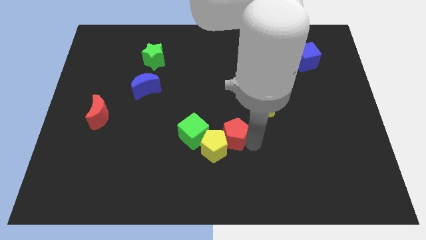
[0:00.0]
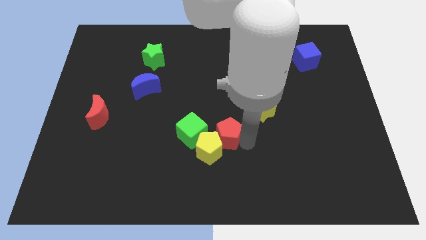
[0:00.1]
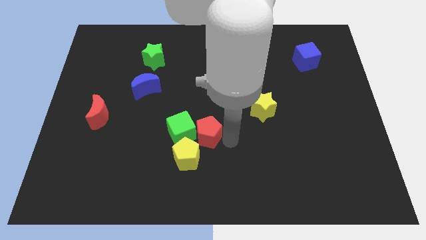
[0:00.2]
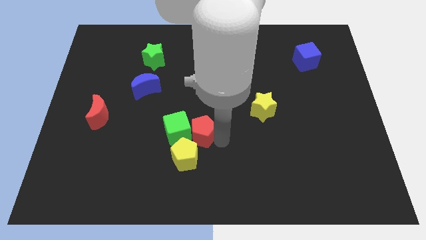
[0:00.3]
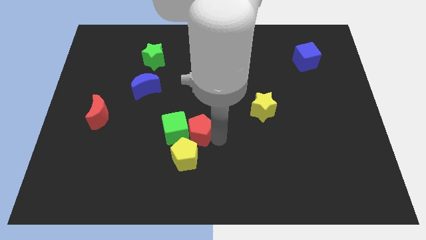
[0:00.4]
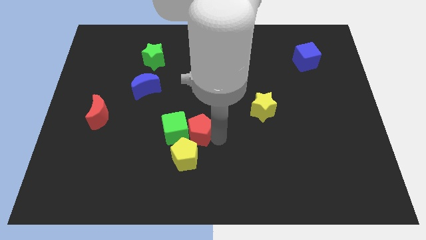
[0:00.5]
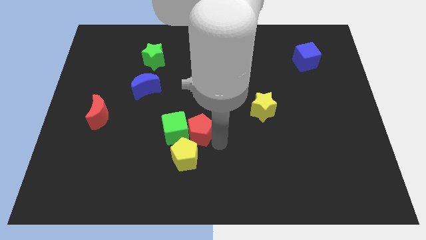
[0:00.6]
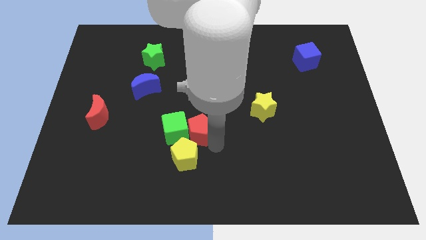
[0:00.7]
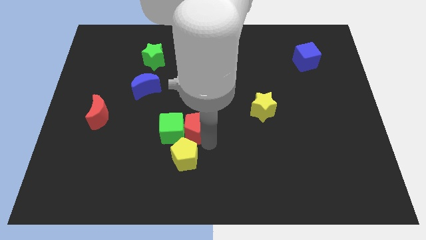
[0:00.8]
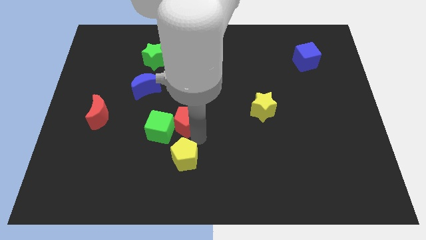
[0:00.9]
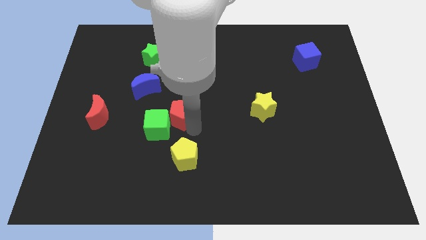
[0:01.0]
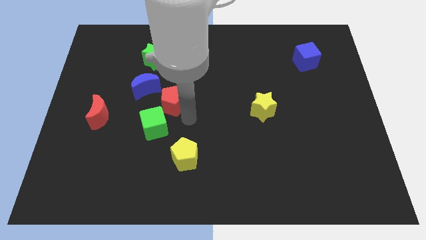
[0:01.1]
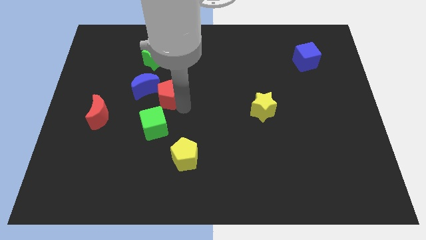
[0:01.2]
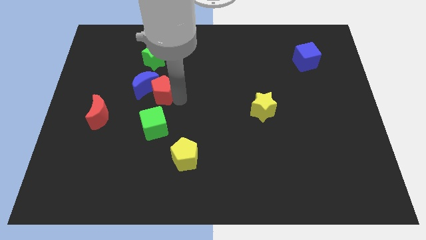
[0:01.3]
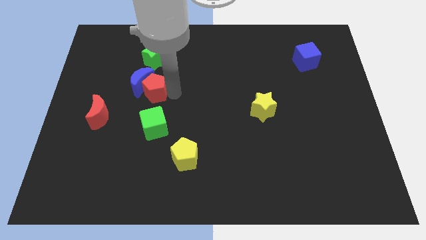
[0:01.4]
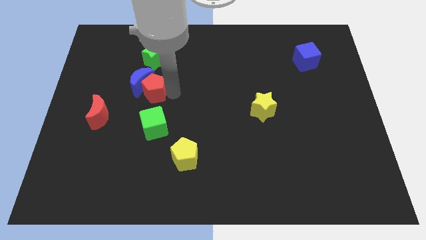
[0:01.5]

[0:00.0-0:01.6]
move the red pentagon into the blue moon

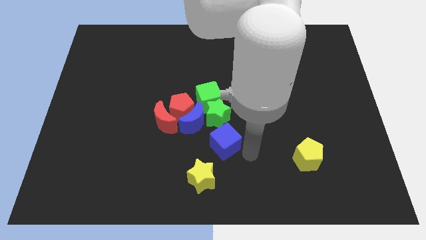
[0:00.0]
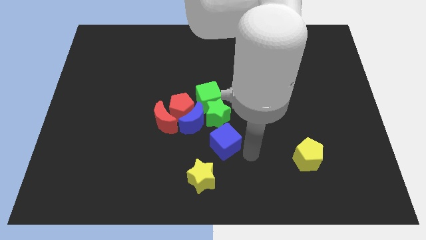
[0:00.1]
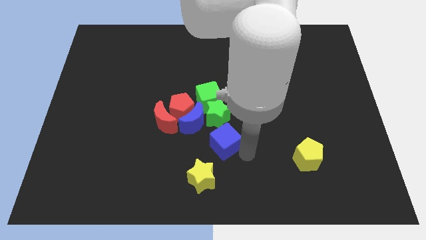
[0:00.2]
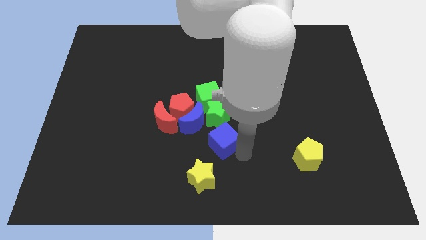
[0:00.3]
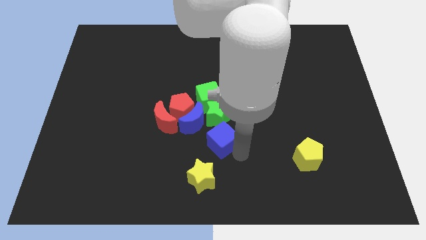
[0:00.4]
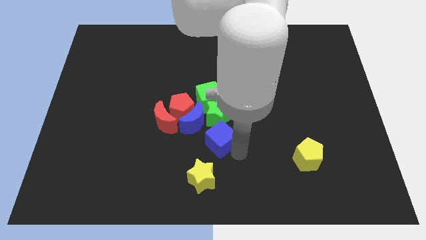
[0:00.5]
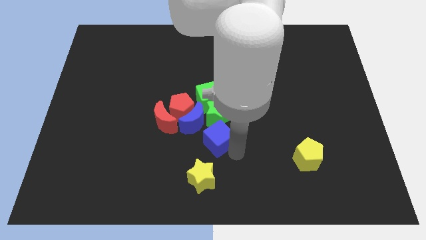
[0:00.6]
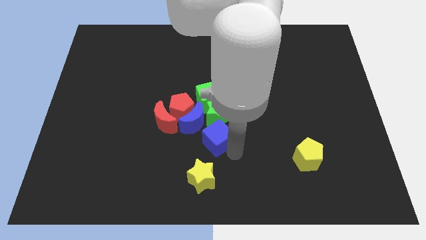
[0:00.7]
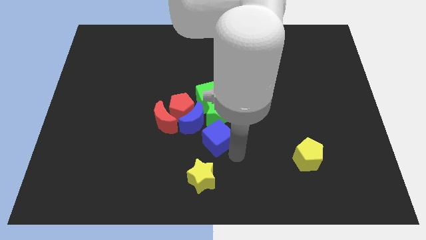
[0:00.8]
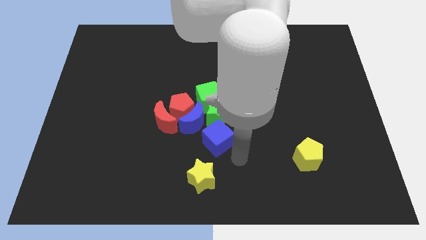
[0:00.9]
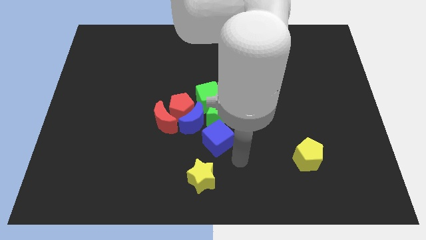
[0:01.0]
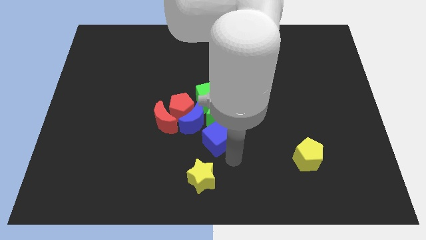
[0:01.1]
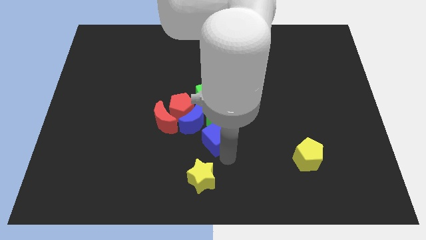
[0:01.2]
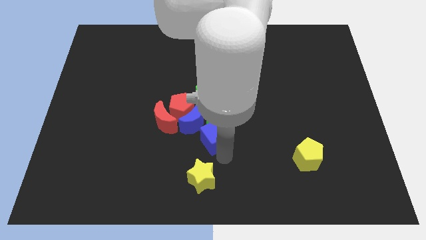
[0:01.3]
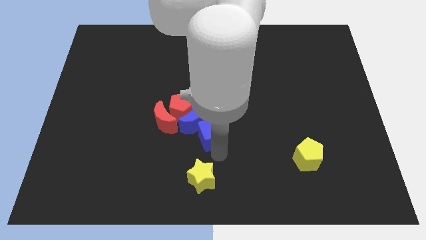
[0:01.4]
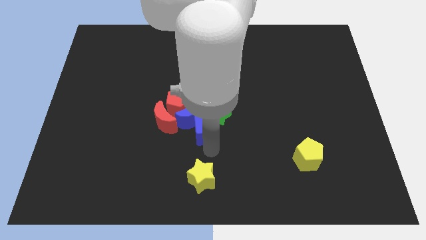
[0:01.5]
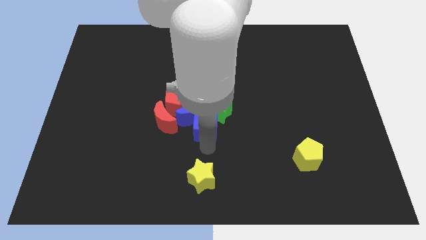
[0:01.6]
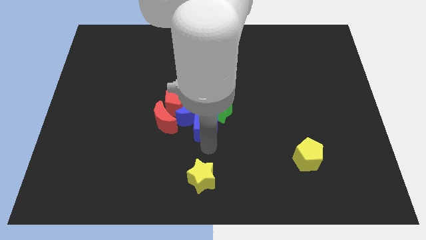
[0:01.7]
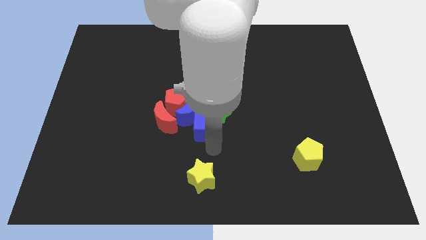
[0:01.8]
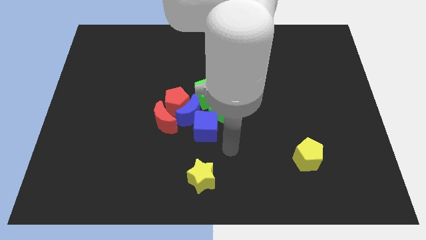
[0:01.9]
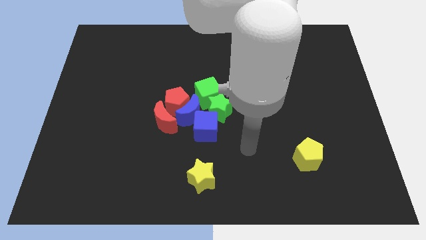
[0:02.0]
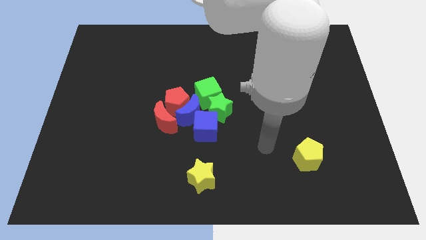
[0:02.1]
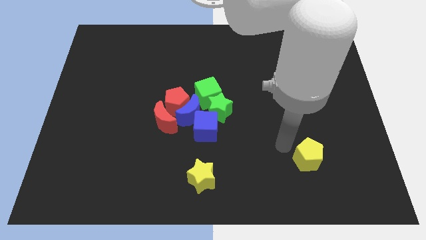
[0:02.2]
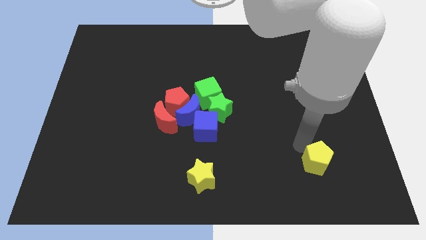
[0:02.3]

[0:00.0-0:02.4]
push the blue cube into blue crescent and green star

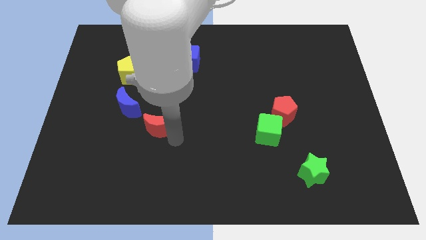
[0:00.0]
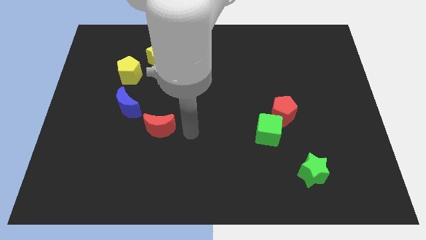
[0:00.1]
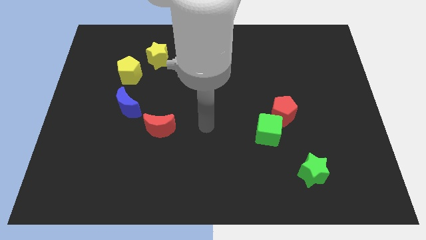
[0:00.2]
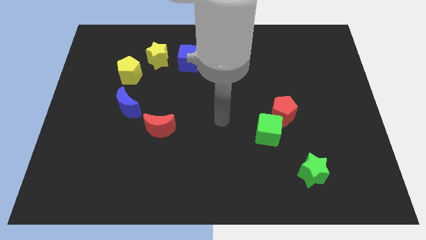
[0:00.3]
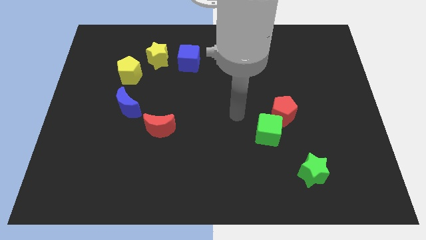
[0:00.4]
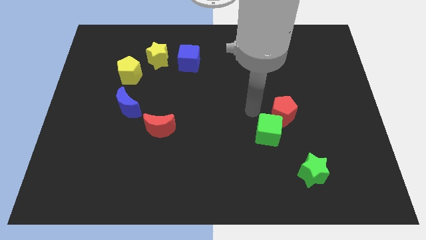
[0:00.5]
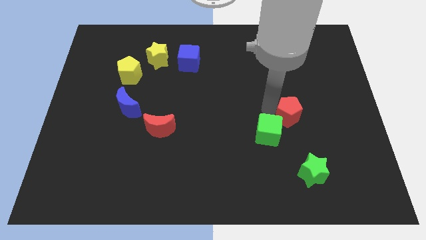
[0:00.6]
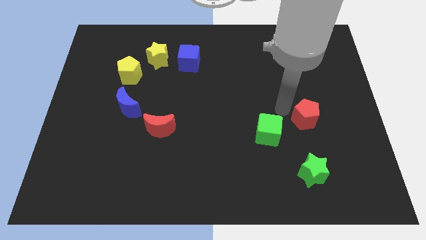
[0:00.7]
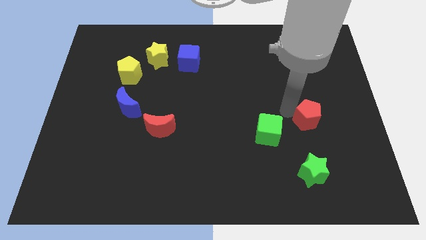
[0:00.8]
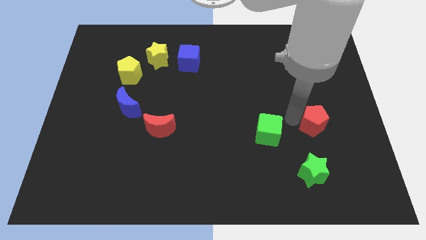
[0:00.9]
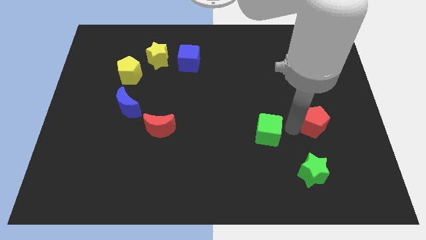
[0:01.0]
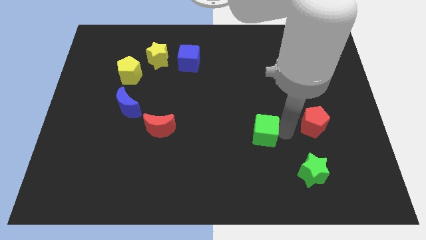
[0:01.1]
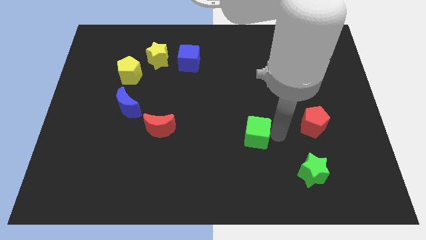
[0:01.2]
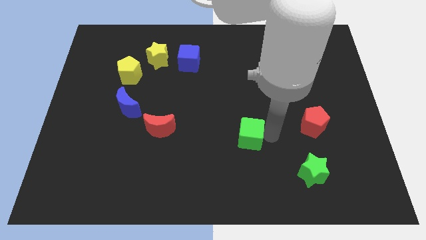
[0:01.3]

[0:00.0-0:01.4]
separate red pentagon and the green cube

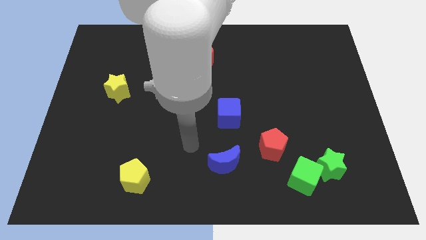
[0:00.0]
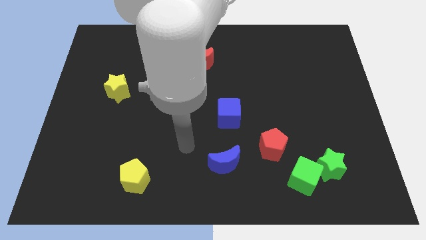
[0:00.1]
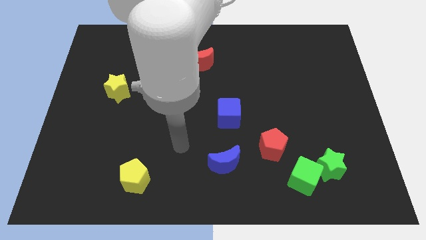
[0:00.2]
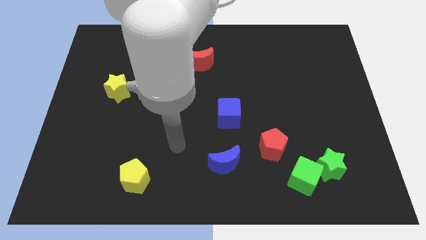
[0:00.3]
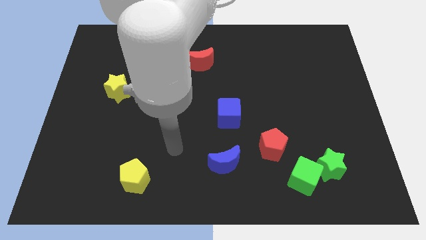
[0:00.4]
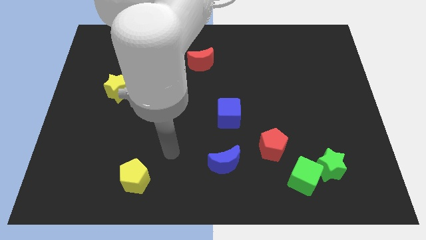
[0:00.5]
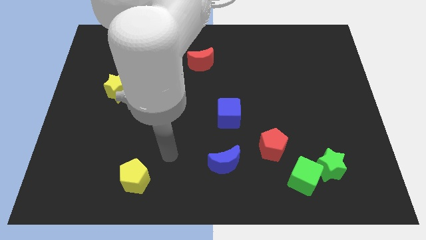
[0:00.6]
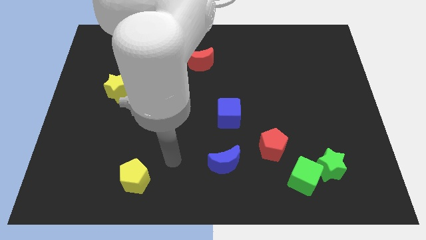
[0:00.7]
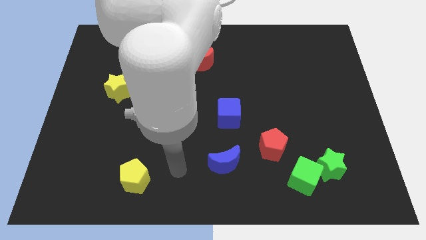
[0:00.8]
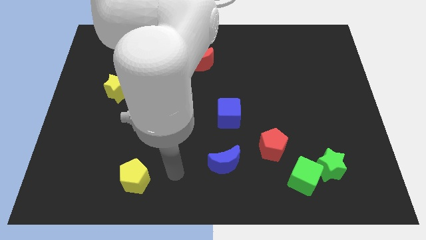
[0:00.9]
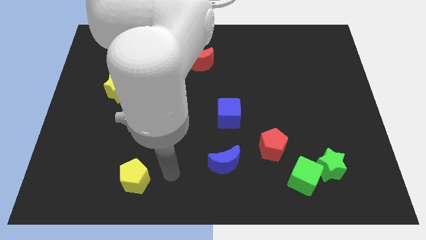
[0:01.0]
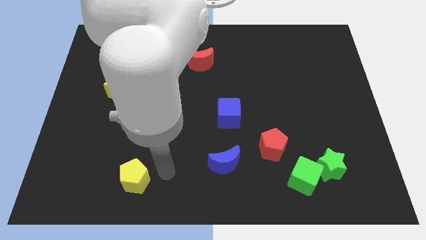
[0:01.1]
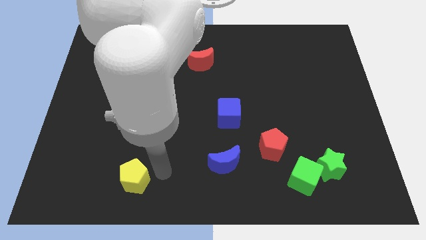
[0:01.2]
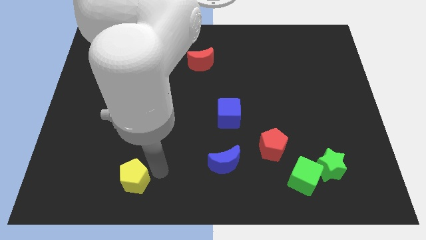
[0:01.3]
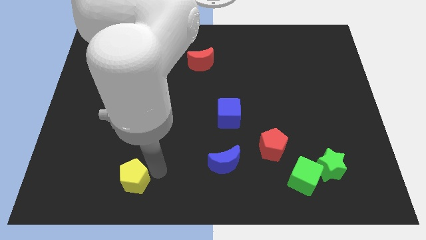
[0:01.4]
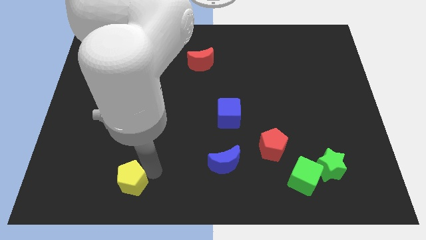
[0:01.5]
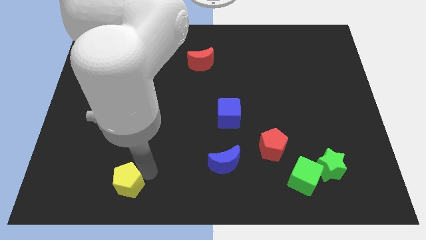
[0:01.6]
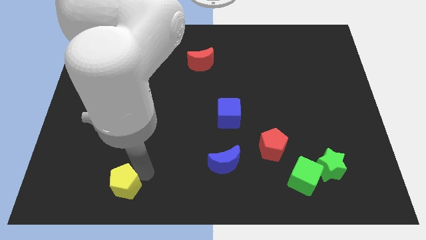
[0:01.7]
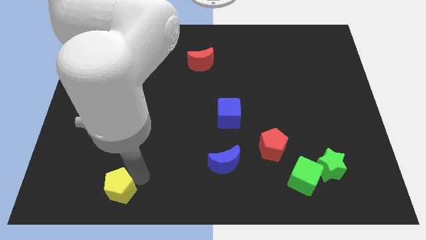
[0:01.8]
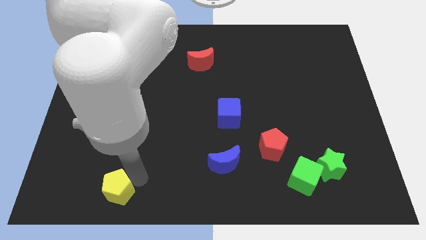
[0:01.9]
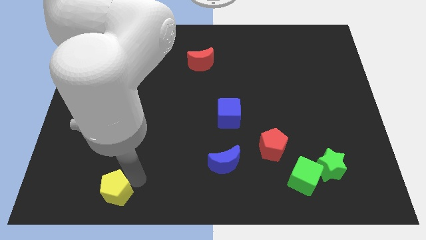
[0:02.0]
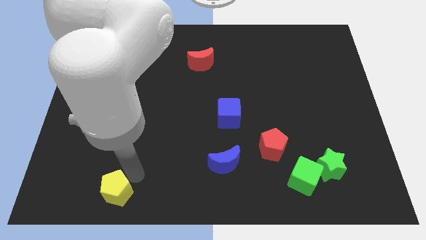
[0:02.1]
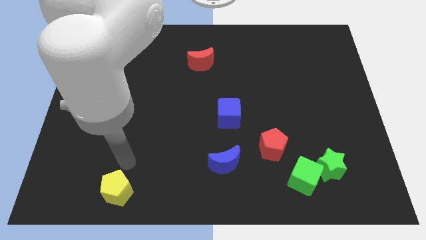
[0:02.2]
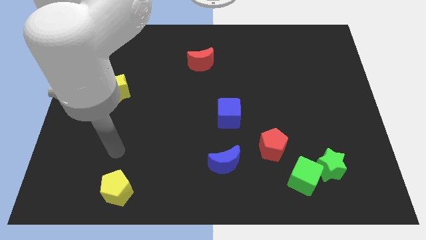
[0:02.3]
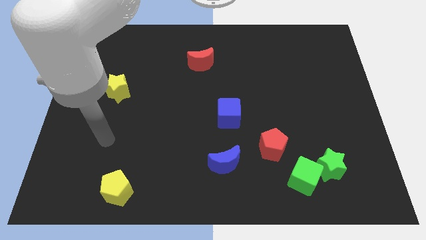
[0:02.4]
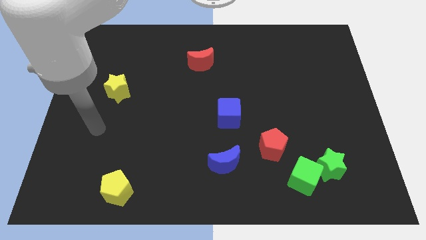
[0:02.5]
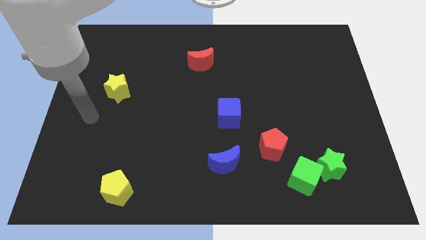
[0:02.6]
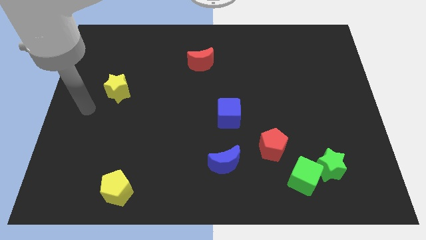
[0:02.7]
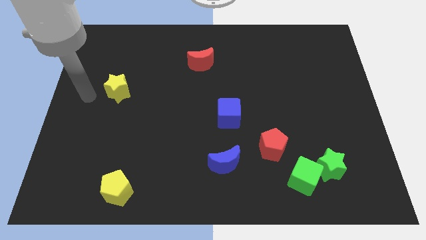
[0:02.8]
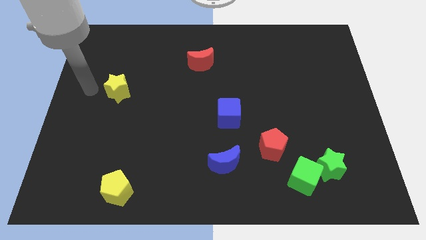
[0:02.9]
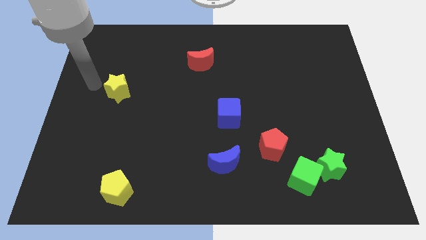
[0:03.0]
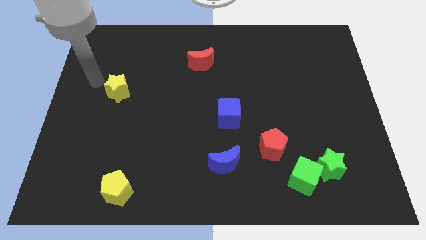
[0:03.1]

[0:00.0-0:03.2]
push the yellow pentagon slightly down

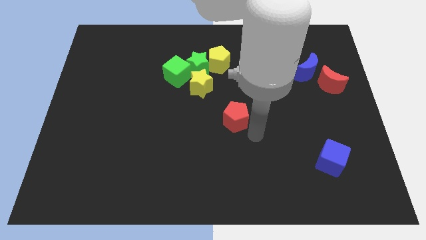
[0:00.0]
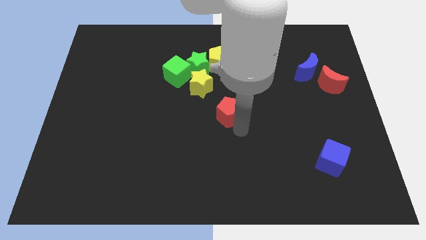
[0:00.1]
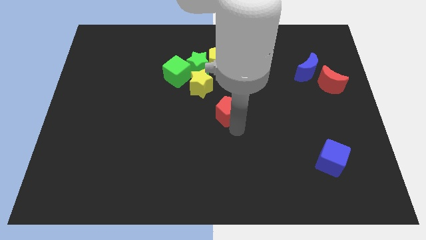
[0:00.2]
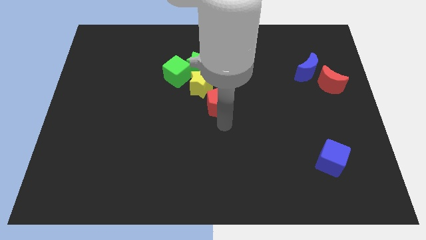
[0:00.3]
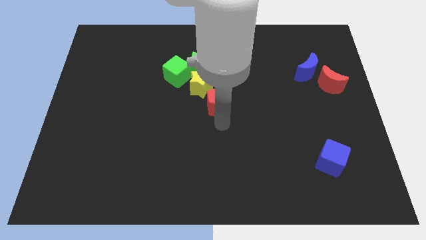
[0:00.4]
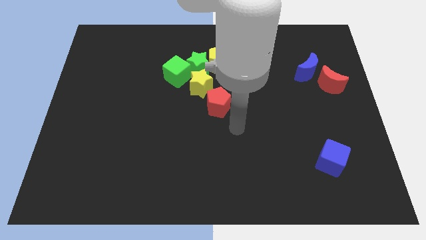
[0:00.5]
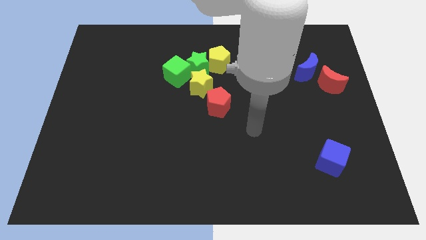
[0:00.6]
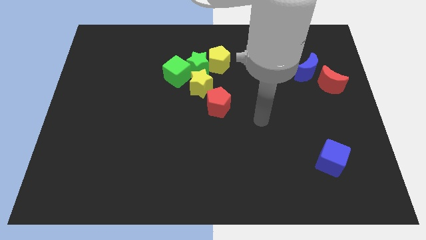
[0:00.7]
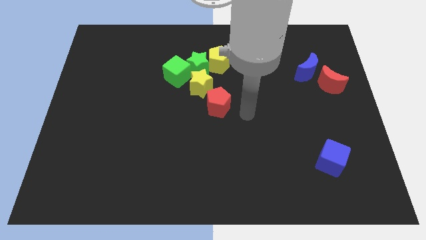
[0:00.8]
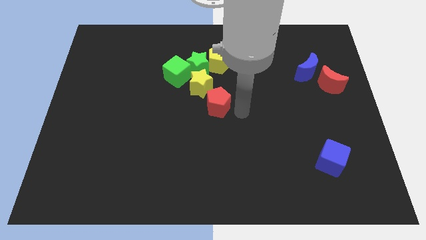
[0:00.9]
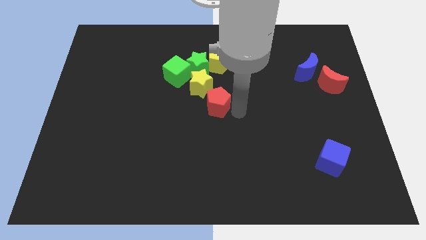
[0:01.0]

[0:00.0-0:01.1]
move red pentagon close to the bottom right to the yellow star
